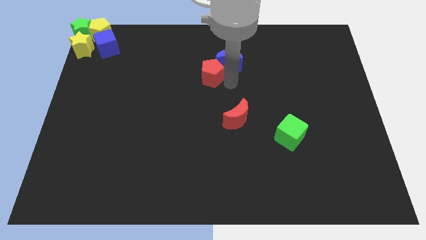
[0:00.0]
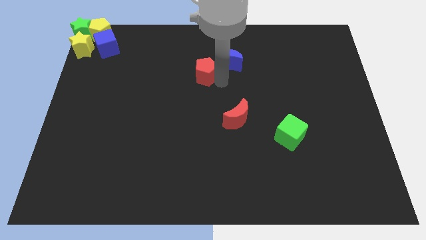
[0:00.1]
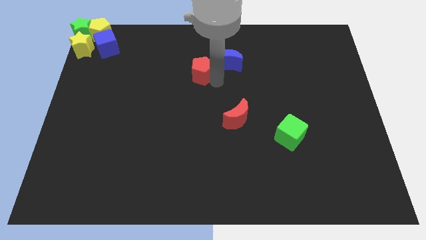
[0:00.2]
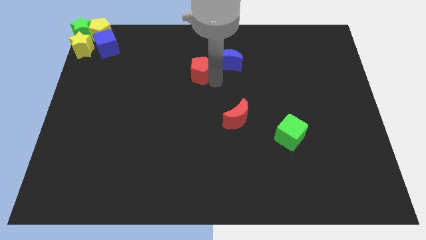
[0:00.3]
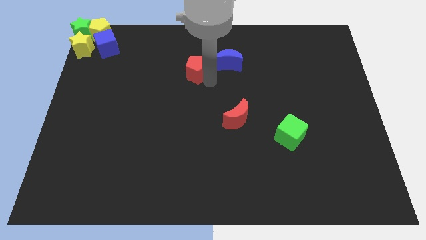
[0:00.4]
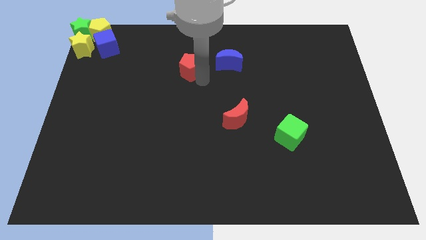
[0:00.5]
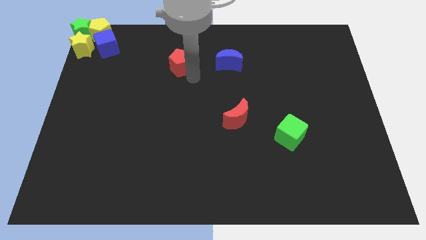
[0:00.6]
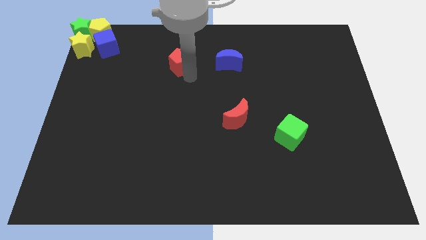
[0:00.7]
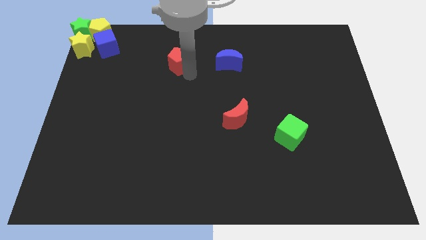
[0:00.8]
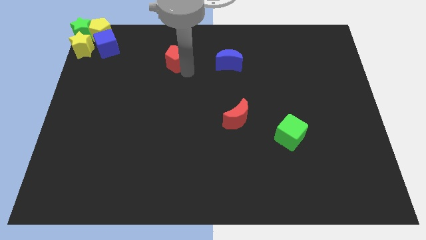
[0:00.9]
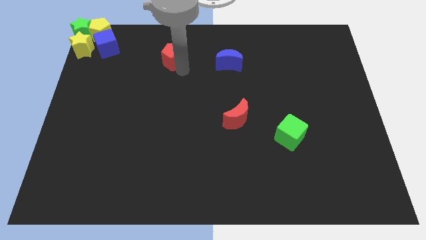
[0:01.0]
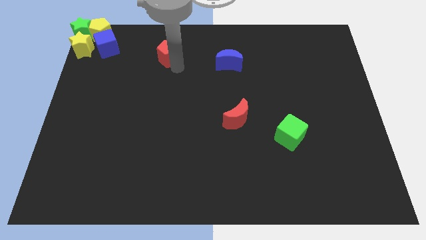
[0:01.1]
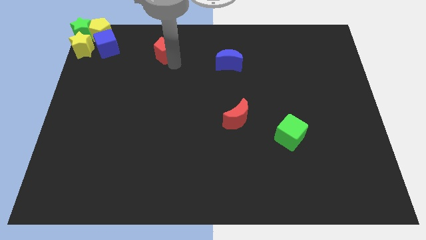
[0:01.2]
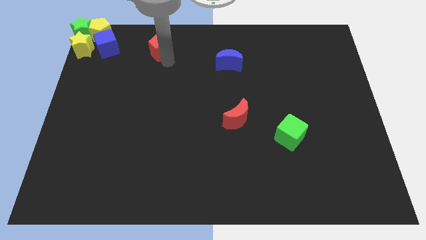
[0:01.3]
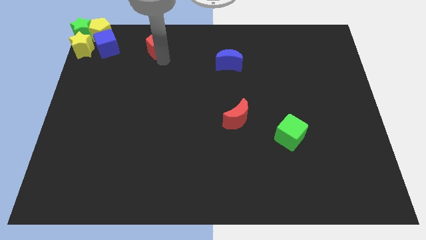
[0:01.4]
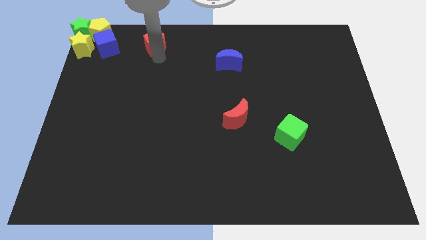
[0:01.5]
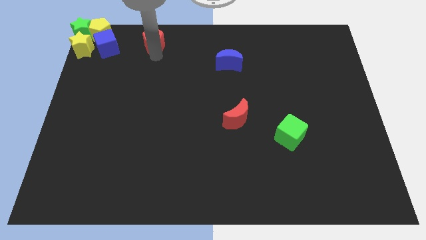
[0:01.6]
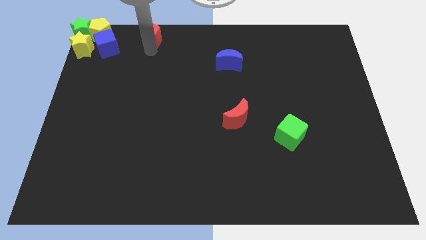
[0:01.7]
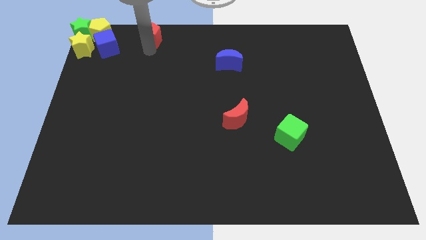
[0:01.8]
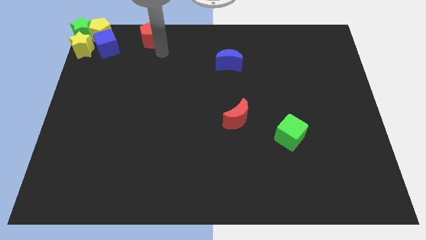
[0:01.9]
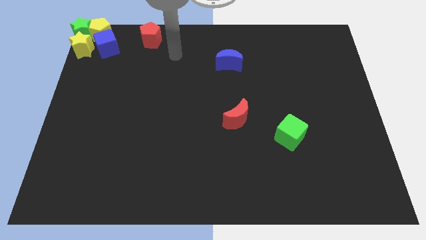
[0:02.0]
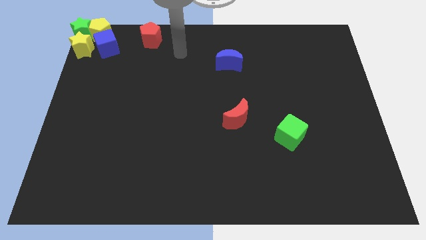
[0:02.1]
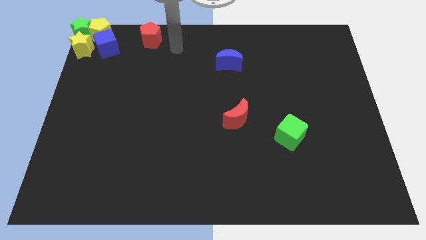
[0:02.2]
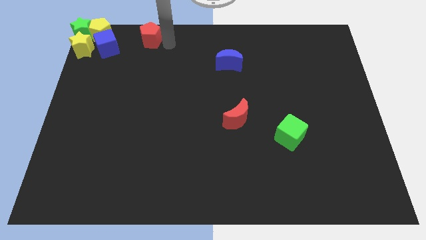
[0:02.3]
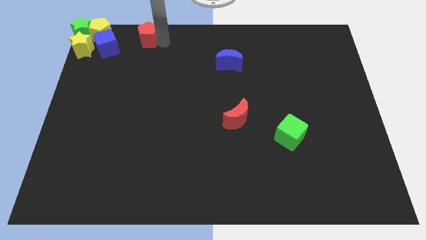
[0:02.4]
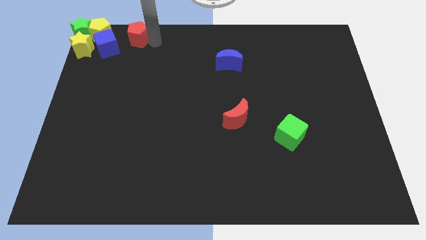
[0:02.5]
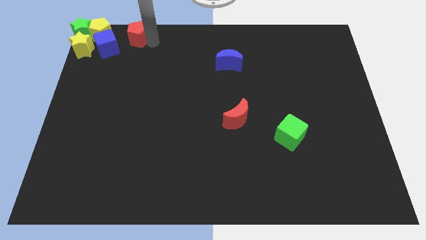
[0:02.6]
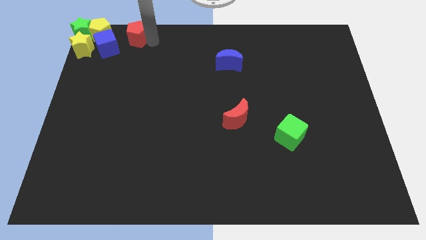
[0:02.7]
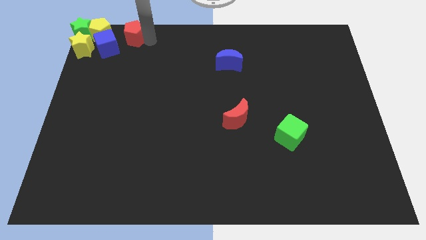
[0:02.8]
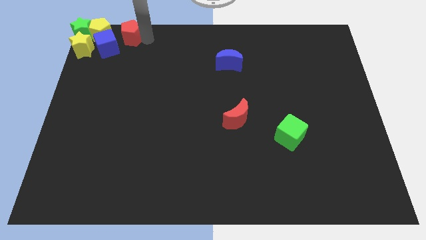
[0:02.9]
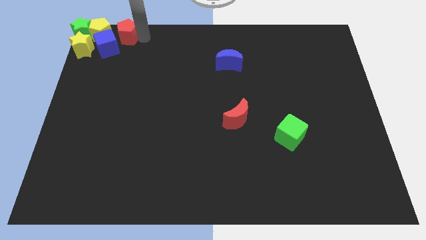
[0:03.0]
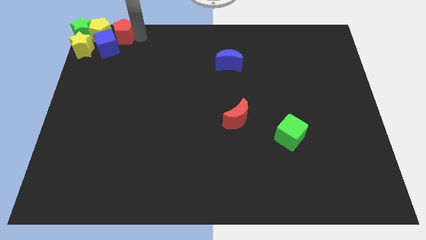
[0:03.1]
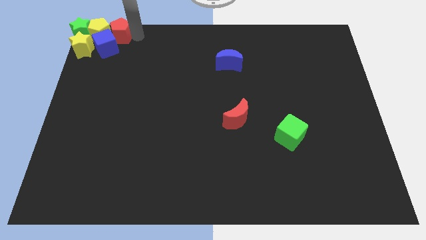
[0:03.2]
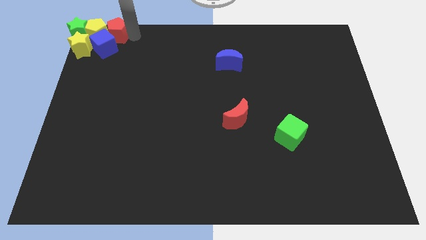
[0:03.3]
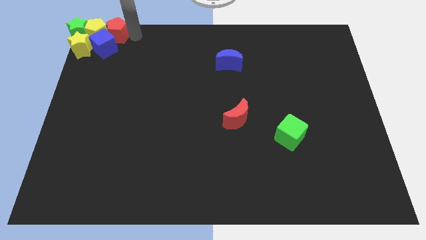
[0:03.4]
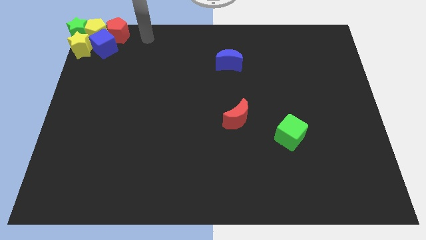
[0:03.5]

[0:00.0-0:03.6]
move the red pentagon into the group of blocks

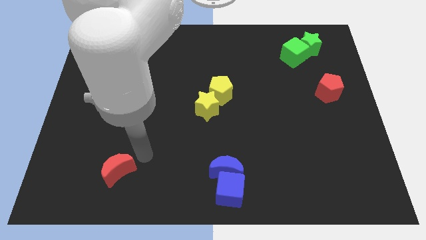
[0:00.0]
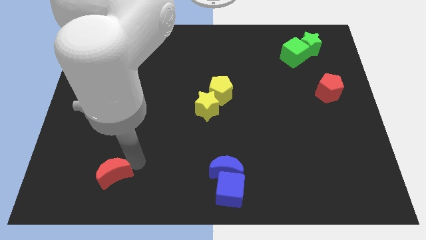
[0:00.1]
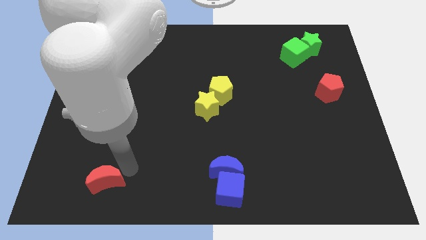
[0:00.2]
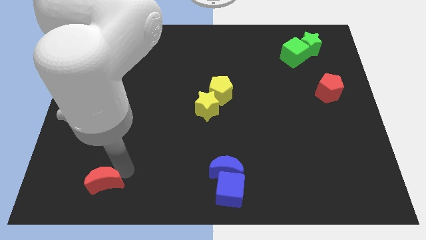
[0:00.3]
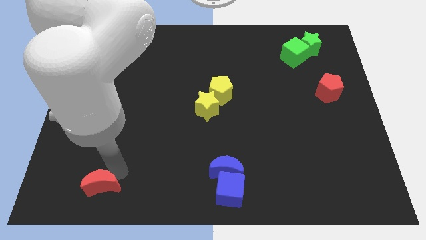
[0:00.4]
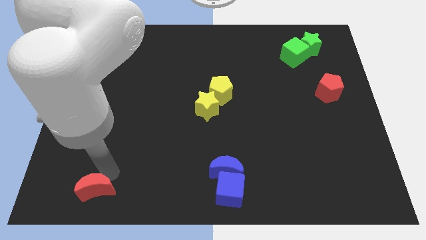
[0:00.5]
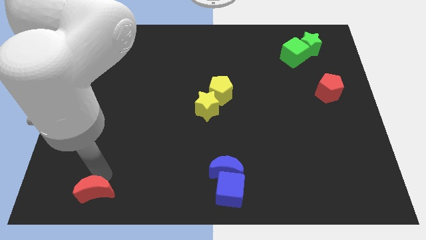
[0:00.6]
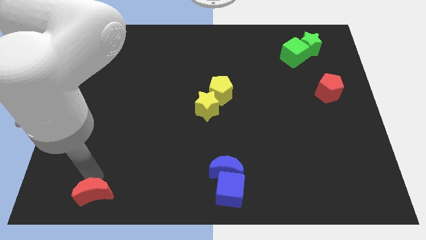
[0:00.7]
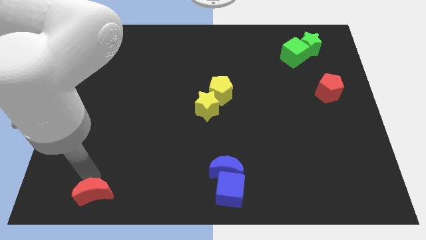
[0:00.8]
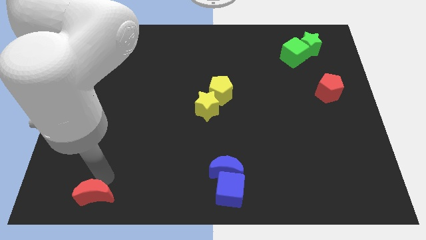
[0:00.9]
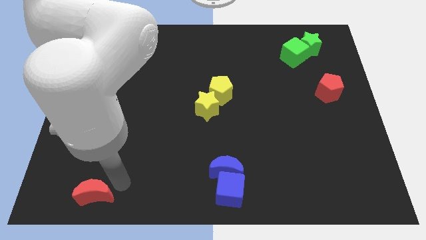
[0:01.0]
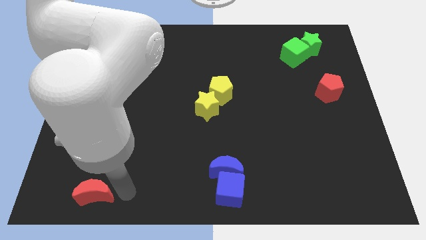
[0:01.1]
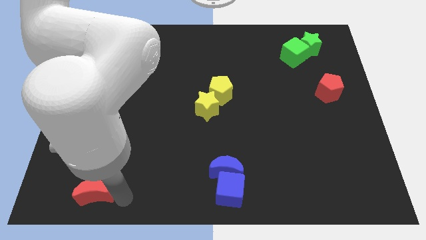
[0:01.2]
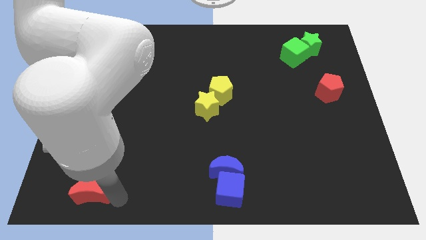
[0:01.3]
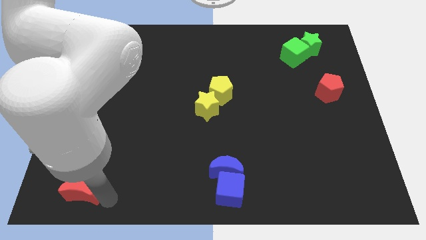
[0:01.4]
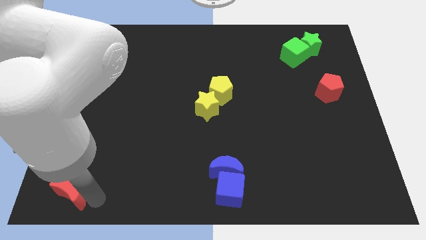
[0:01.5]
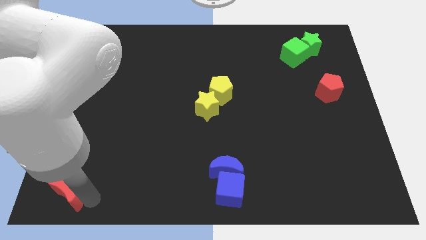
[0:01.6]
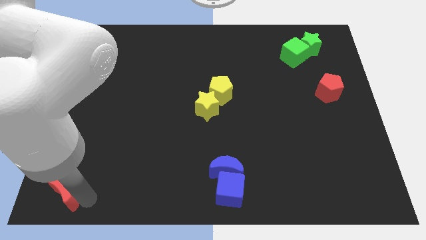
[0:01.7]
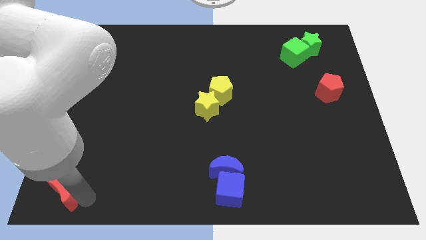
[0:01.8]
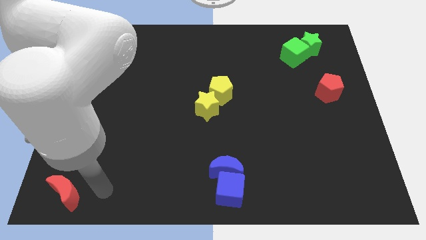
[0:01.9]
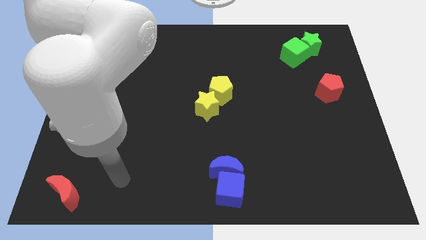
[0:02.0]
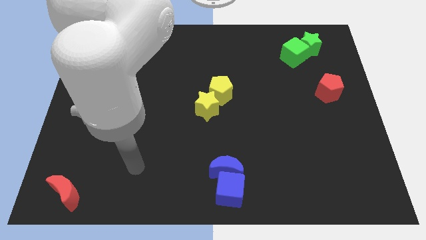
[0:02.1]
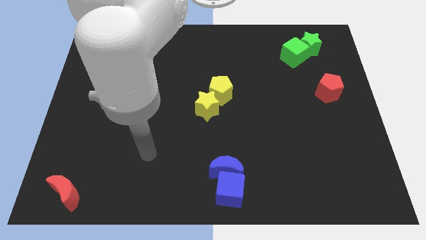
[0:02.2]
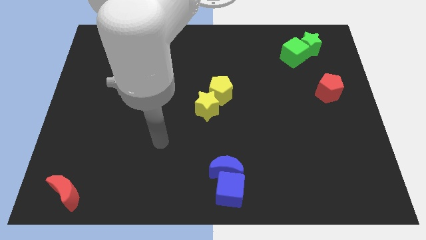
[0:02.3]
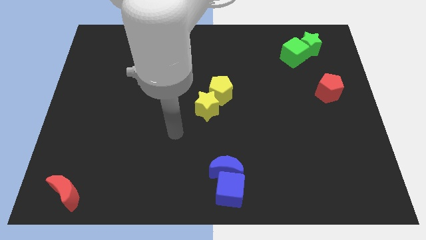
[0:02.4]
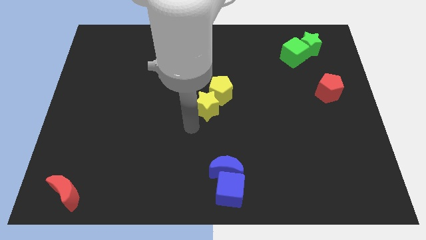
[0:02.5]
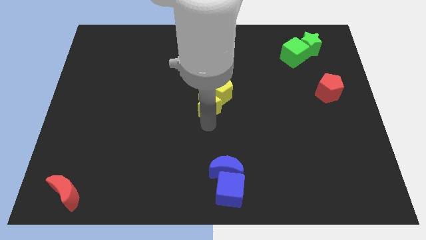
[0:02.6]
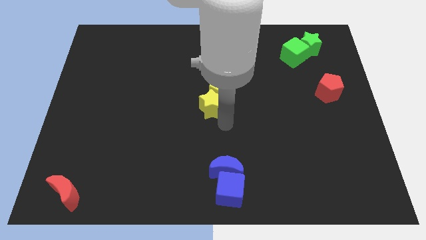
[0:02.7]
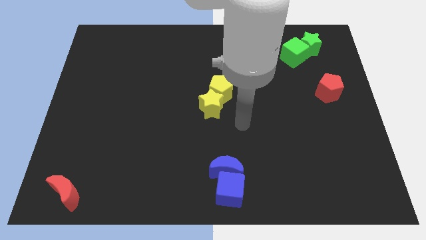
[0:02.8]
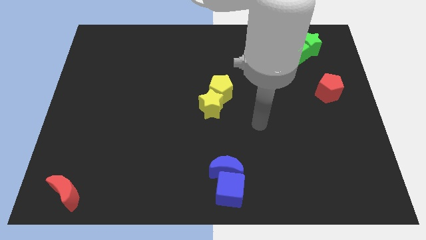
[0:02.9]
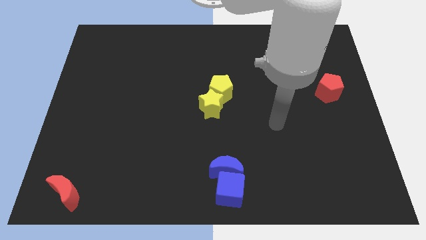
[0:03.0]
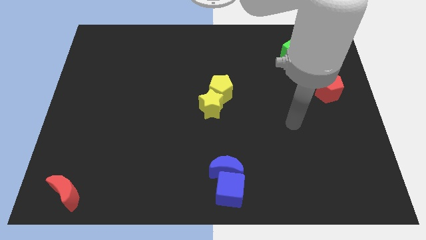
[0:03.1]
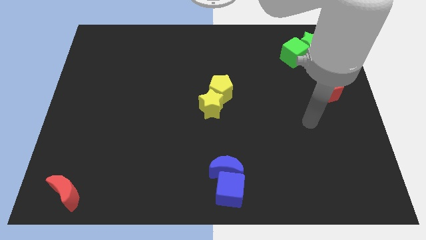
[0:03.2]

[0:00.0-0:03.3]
push the red crescent towards the left corner of the board

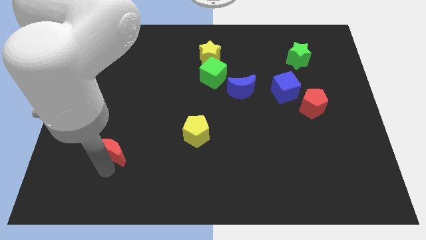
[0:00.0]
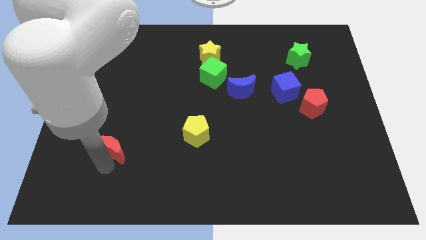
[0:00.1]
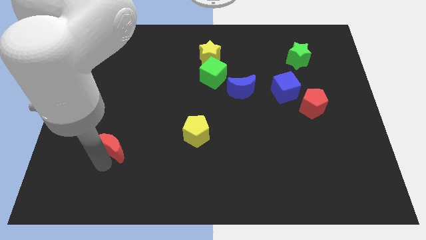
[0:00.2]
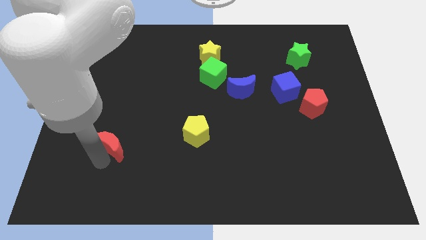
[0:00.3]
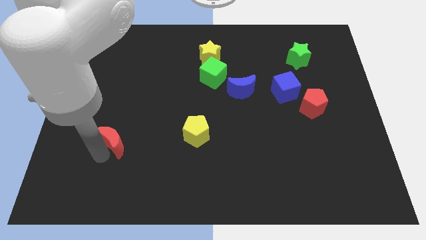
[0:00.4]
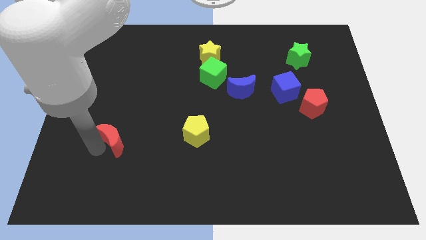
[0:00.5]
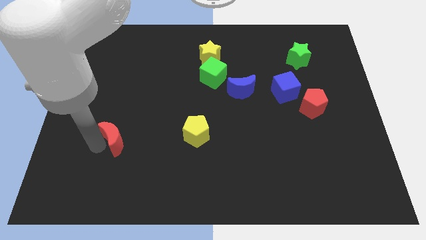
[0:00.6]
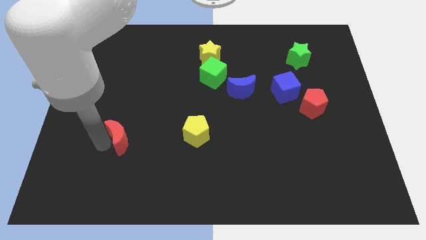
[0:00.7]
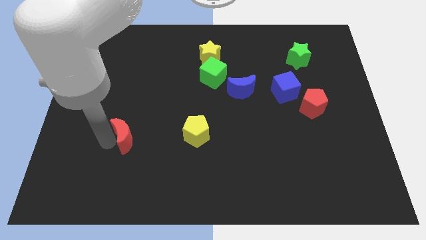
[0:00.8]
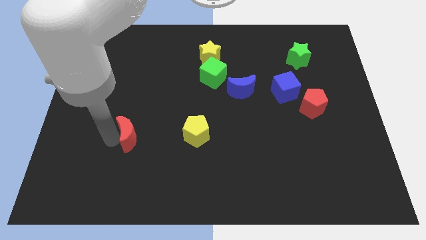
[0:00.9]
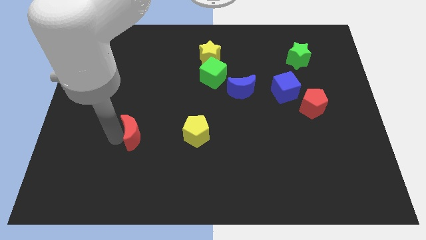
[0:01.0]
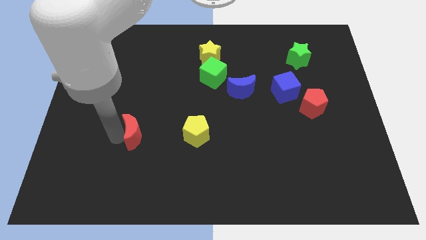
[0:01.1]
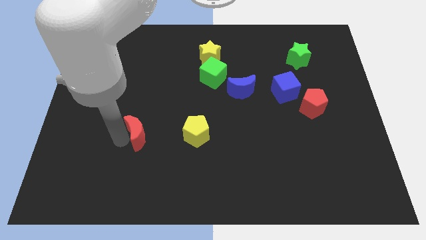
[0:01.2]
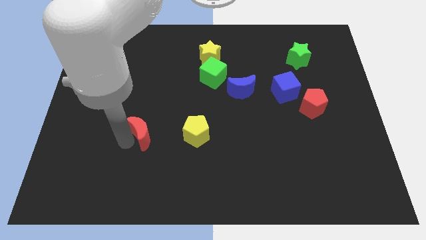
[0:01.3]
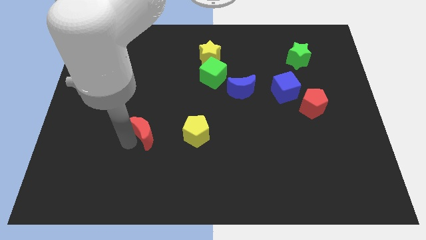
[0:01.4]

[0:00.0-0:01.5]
move red moon parallel to yellow pentagon

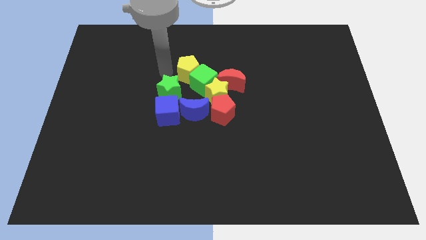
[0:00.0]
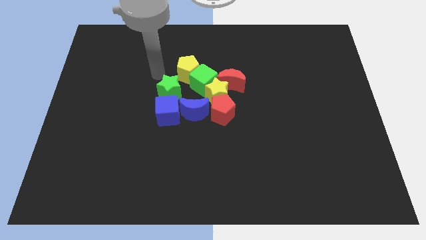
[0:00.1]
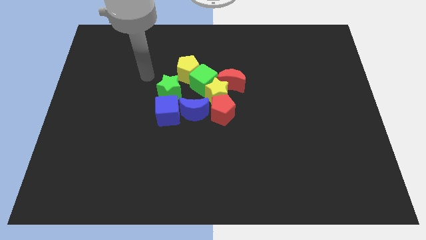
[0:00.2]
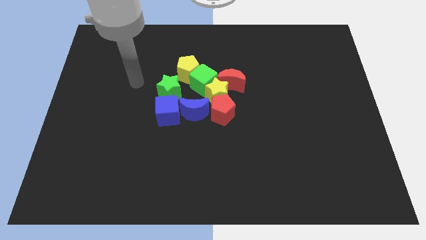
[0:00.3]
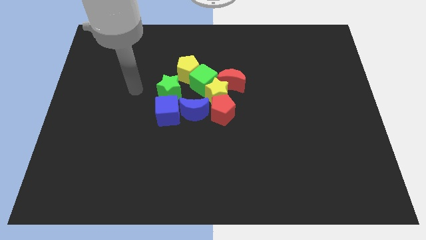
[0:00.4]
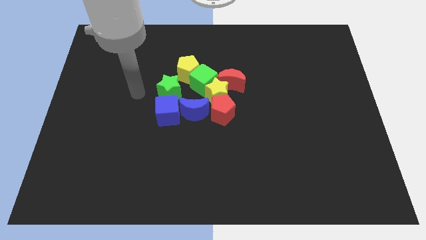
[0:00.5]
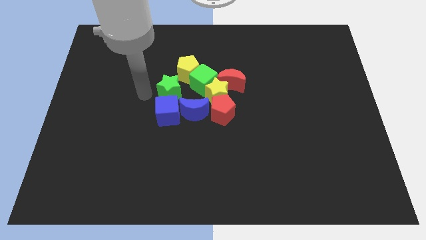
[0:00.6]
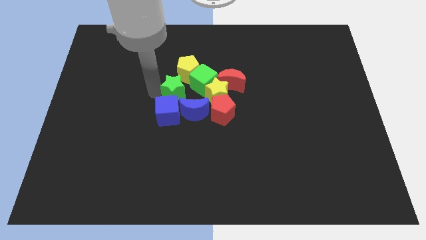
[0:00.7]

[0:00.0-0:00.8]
tap the green star
